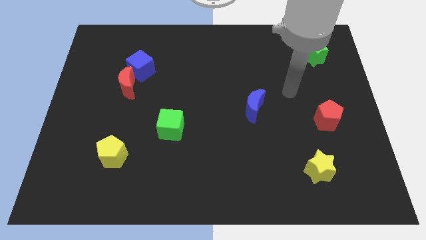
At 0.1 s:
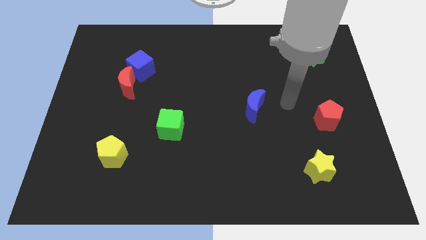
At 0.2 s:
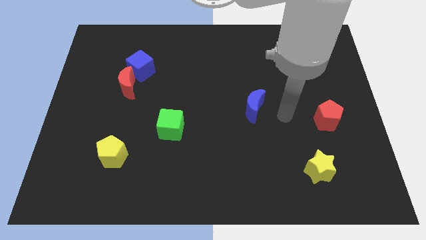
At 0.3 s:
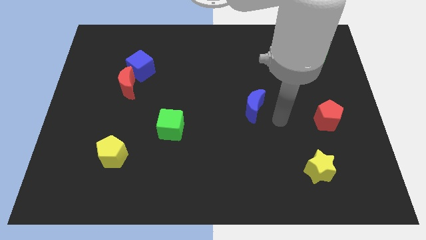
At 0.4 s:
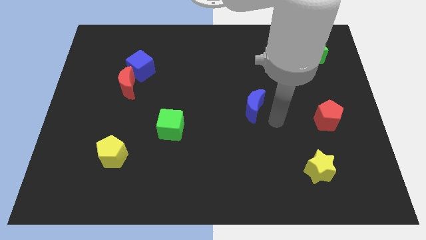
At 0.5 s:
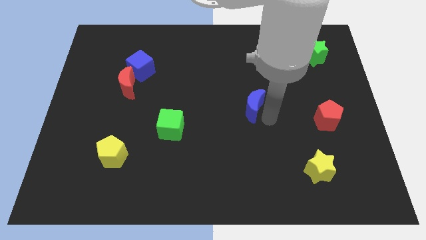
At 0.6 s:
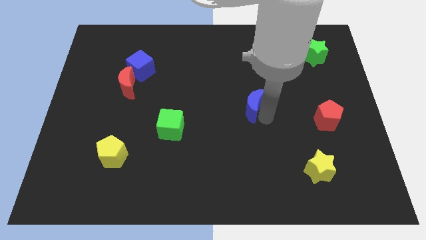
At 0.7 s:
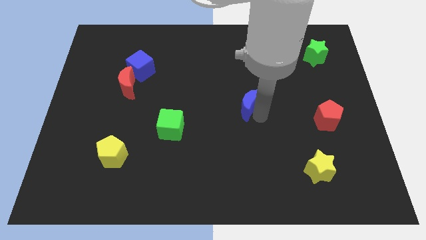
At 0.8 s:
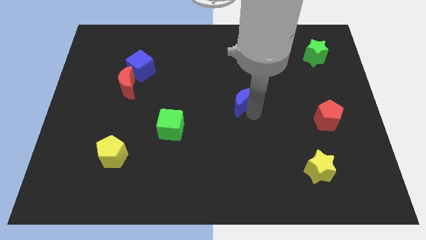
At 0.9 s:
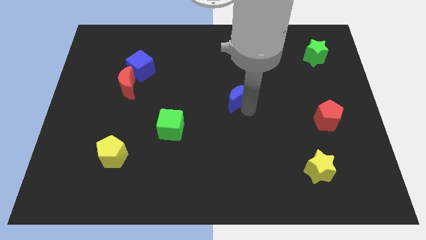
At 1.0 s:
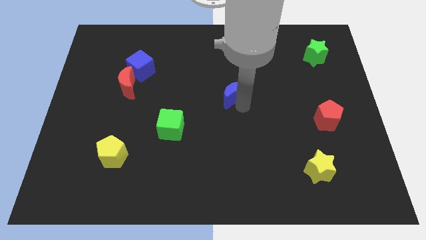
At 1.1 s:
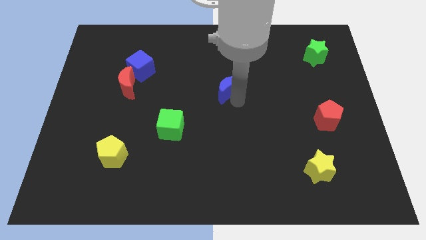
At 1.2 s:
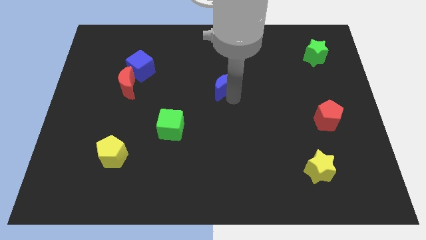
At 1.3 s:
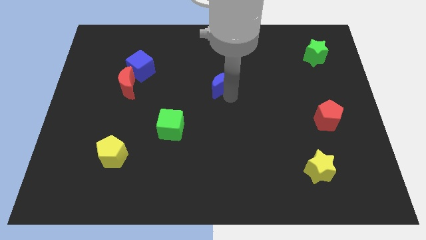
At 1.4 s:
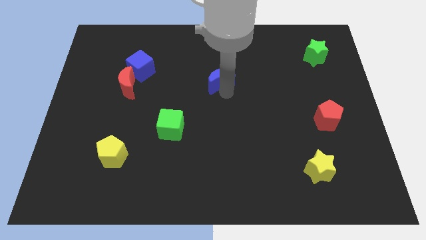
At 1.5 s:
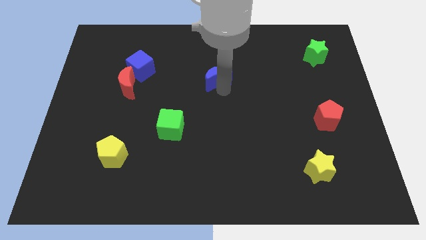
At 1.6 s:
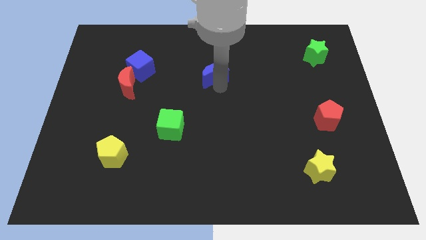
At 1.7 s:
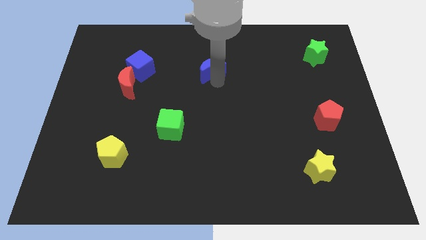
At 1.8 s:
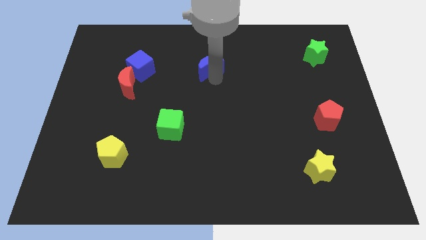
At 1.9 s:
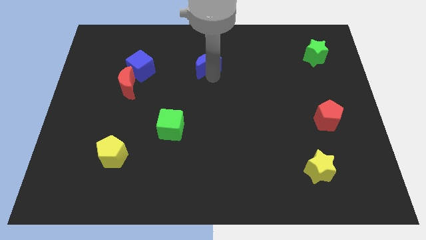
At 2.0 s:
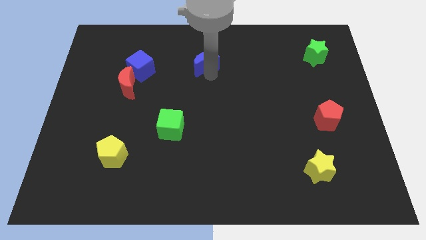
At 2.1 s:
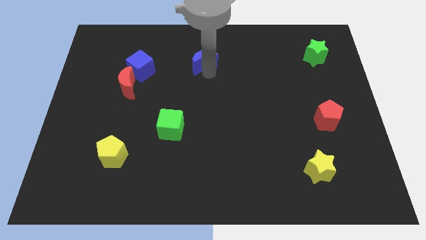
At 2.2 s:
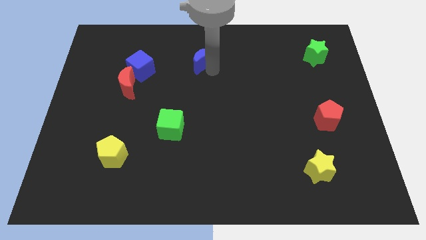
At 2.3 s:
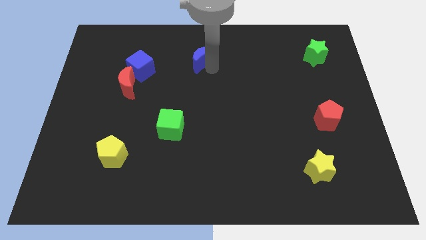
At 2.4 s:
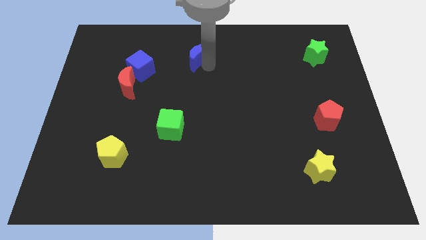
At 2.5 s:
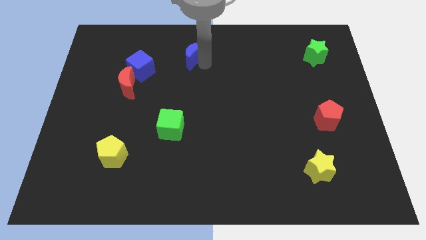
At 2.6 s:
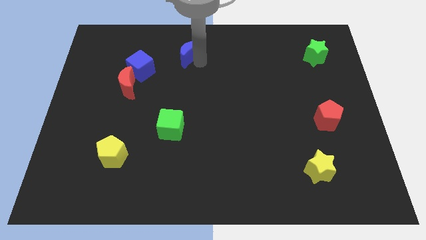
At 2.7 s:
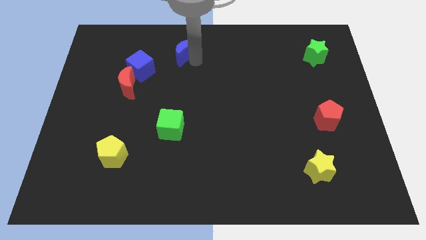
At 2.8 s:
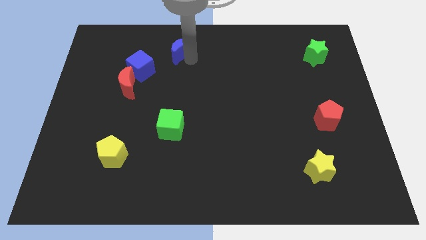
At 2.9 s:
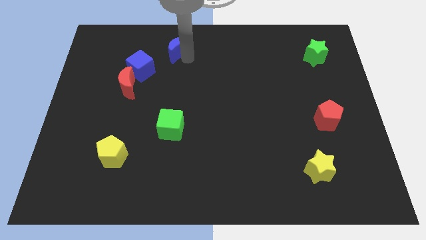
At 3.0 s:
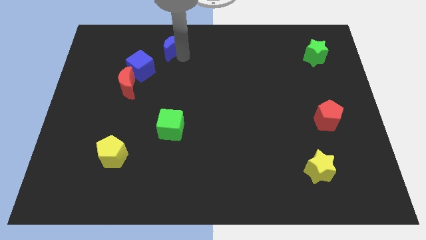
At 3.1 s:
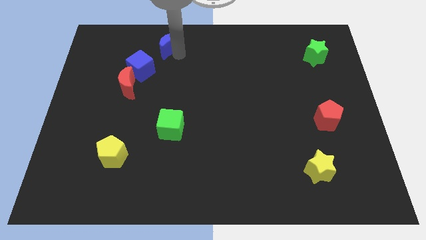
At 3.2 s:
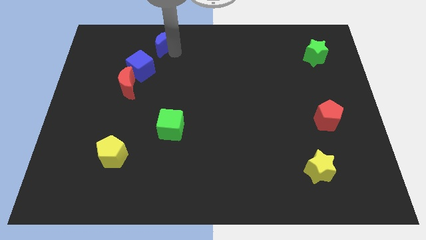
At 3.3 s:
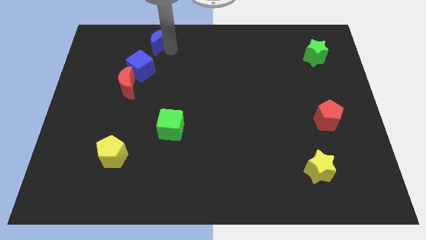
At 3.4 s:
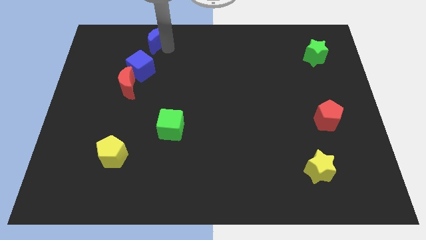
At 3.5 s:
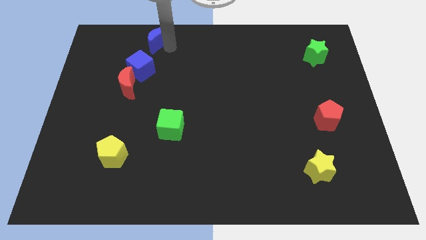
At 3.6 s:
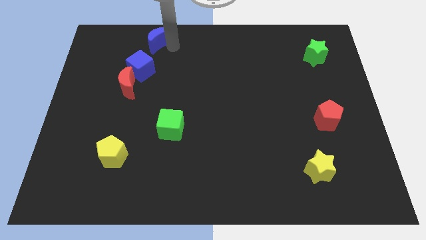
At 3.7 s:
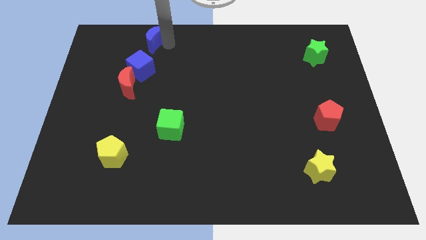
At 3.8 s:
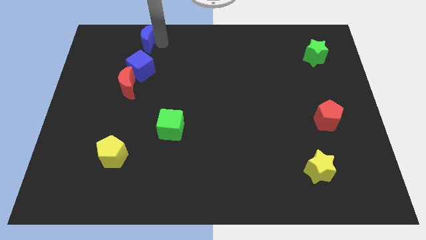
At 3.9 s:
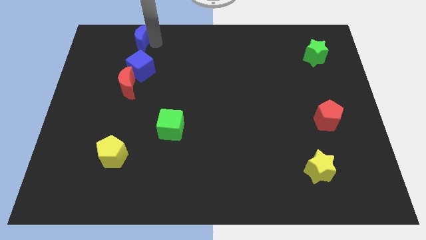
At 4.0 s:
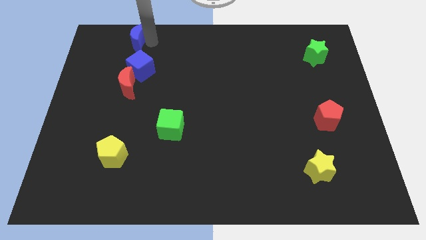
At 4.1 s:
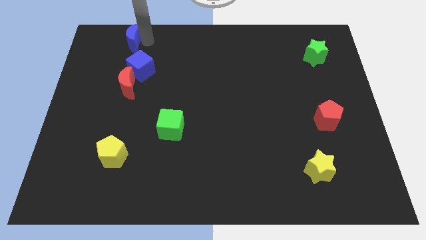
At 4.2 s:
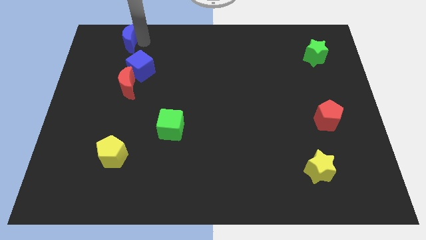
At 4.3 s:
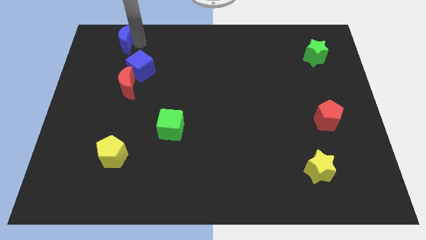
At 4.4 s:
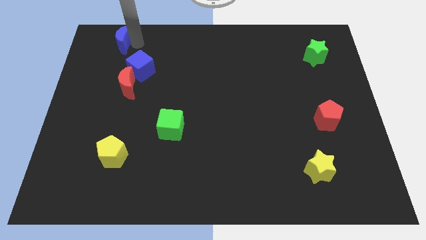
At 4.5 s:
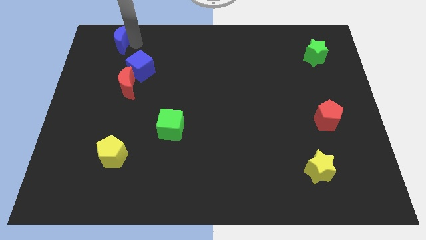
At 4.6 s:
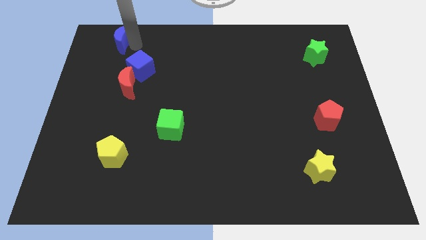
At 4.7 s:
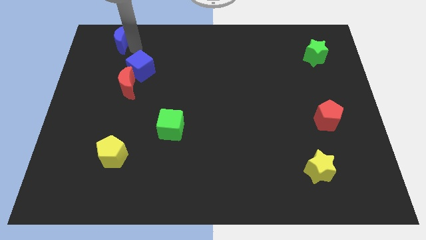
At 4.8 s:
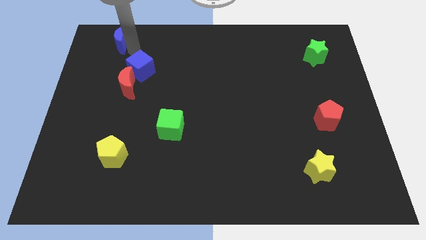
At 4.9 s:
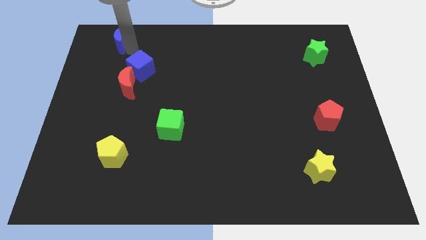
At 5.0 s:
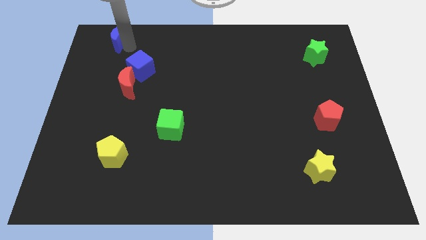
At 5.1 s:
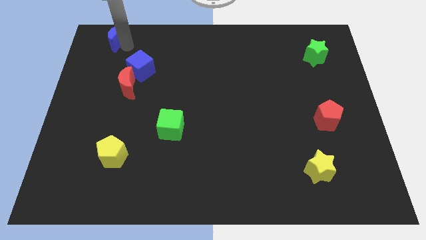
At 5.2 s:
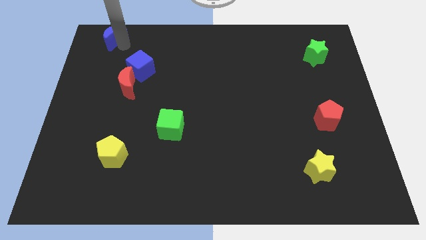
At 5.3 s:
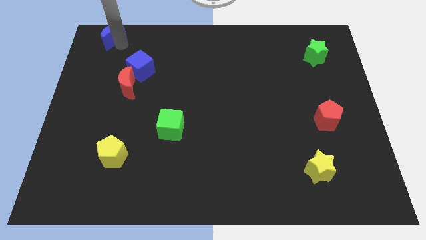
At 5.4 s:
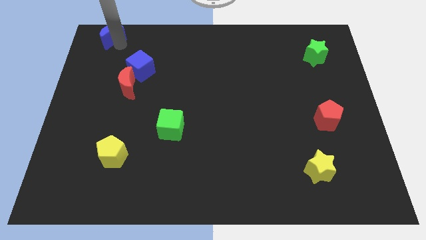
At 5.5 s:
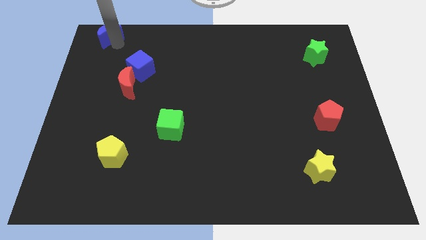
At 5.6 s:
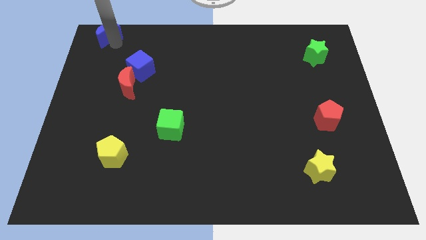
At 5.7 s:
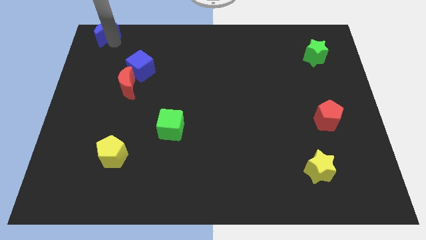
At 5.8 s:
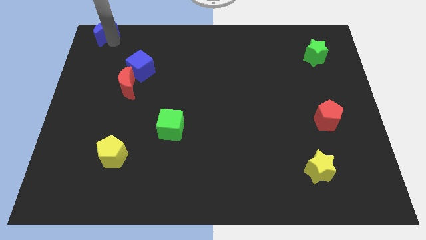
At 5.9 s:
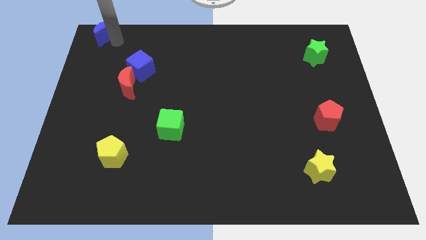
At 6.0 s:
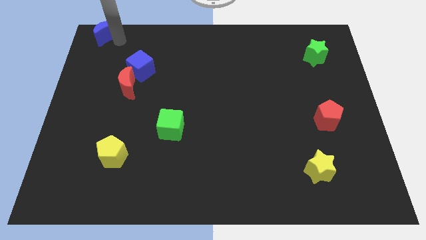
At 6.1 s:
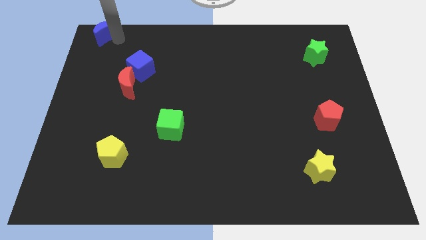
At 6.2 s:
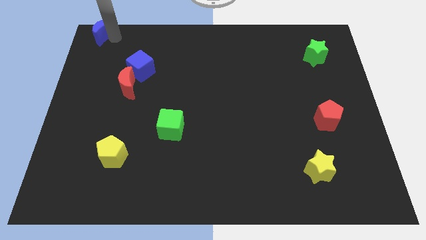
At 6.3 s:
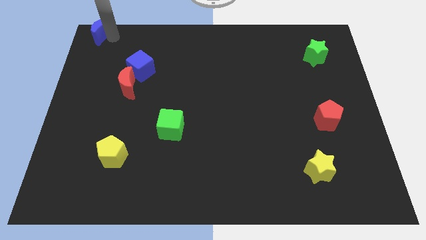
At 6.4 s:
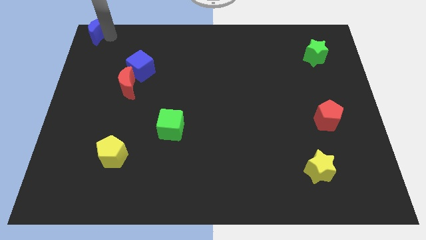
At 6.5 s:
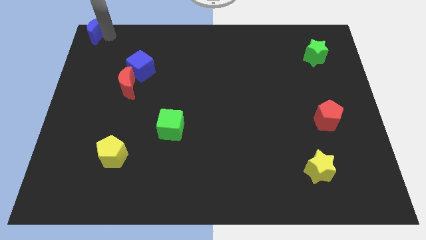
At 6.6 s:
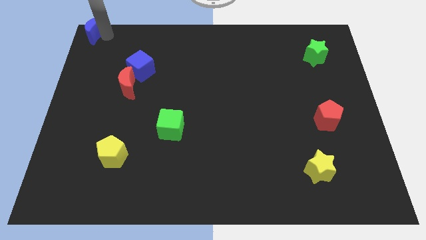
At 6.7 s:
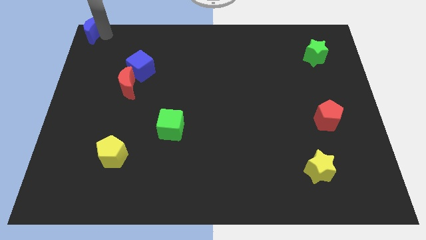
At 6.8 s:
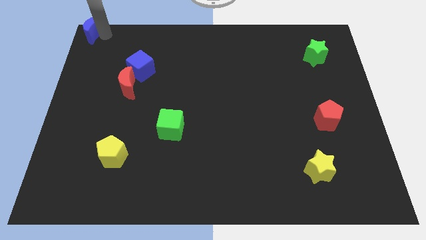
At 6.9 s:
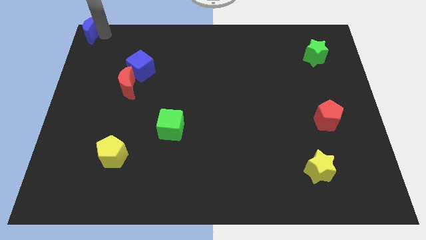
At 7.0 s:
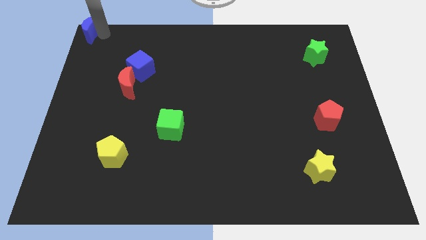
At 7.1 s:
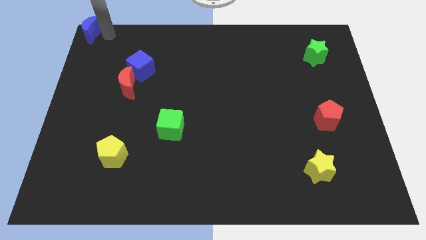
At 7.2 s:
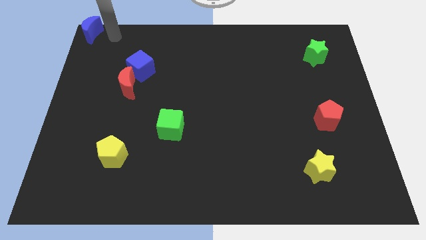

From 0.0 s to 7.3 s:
move the blue crescent to the top left corner

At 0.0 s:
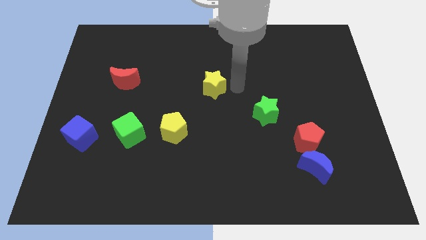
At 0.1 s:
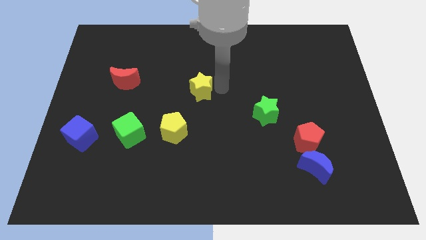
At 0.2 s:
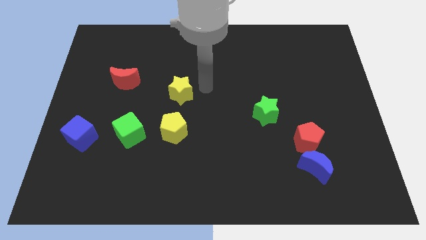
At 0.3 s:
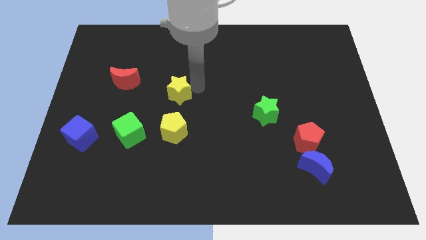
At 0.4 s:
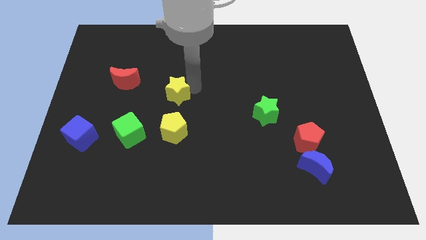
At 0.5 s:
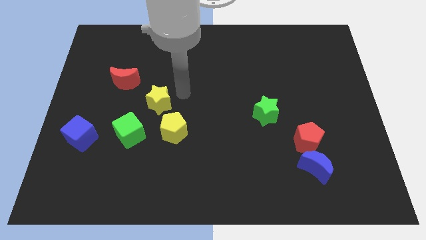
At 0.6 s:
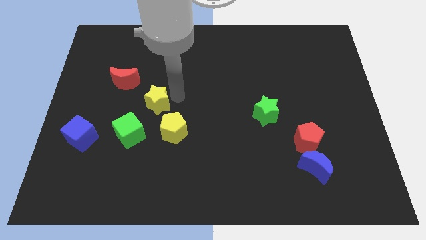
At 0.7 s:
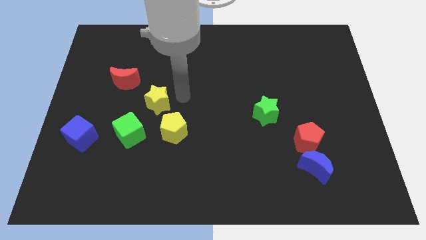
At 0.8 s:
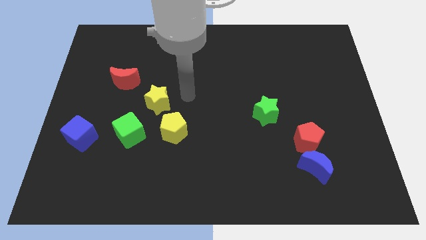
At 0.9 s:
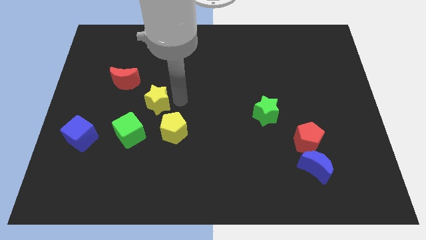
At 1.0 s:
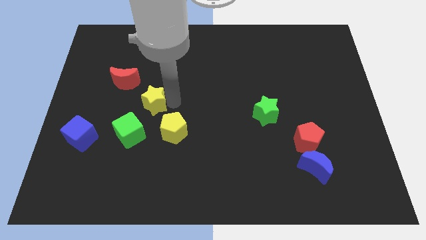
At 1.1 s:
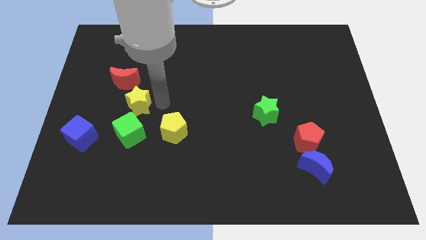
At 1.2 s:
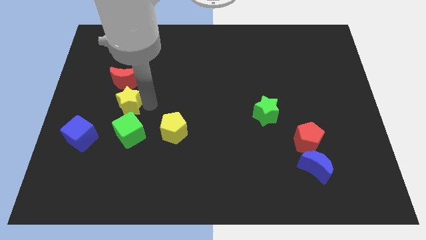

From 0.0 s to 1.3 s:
place the yellow star to the bottom right of the red crescent

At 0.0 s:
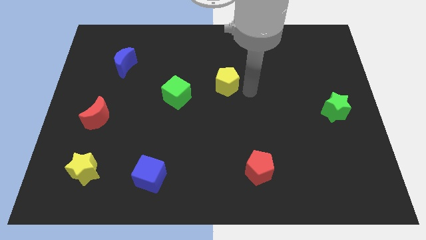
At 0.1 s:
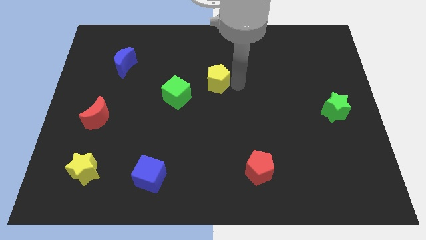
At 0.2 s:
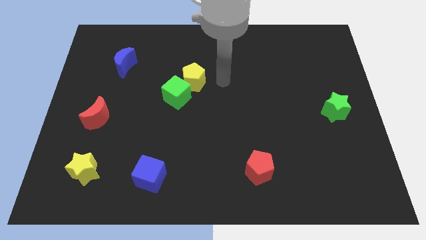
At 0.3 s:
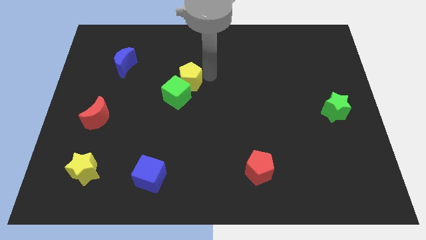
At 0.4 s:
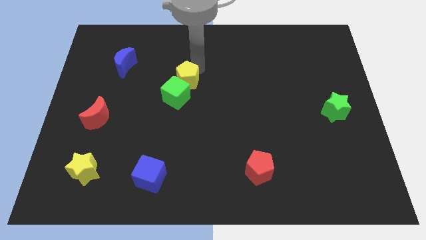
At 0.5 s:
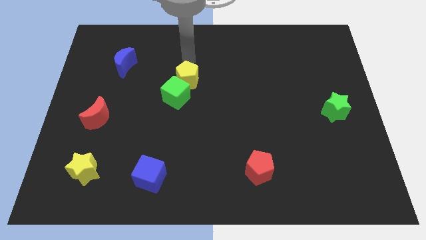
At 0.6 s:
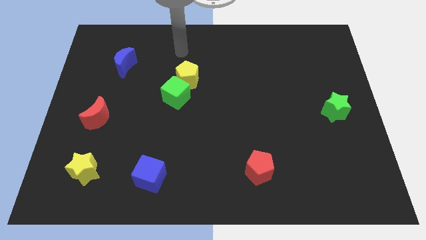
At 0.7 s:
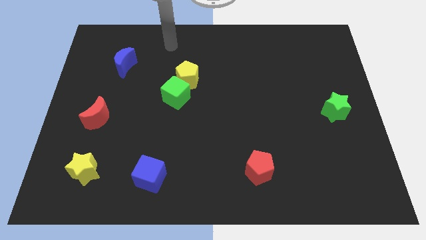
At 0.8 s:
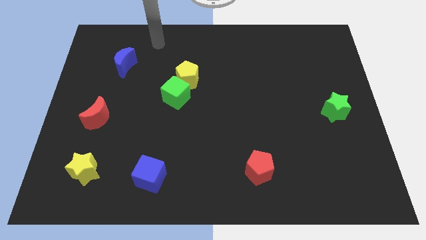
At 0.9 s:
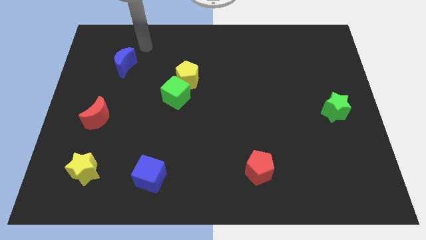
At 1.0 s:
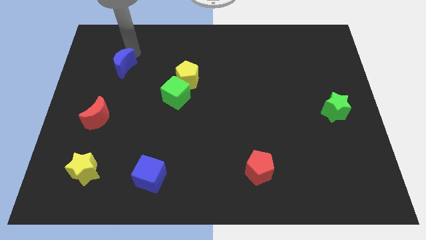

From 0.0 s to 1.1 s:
put the yellow pentagon at the top of the green cube
